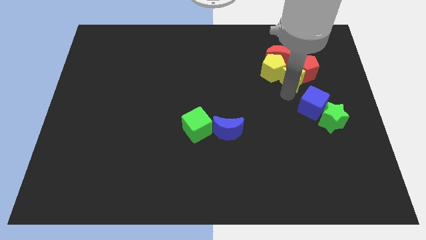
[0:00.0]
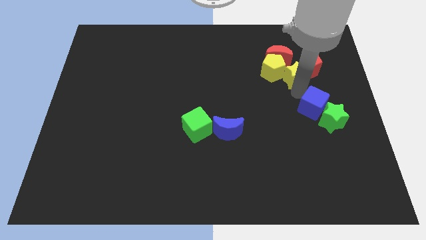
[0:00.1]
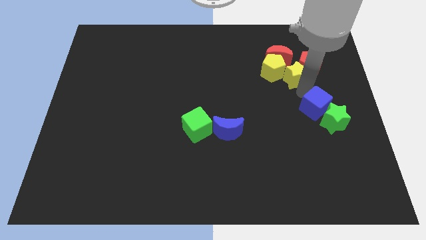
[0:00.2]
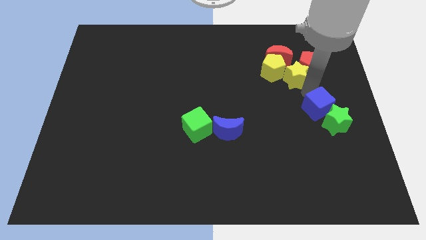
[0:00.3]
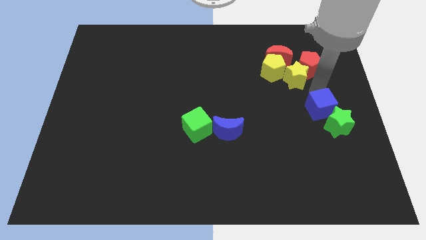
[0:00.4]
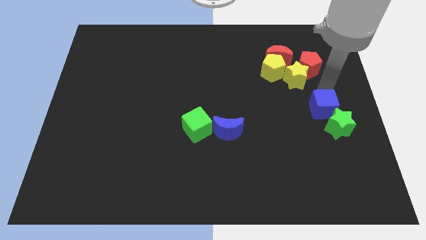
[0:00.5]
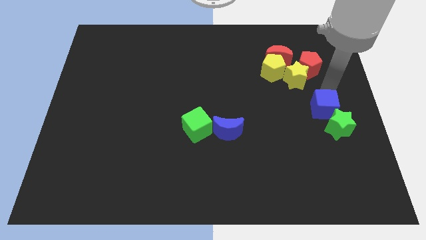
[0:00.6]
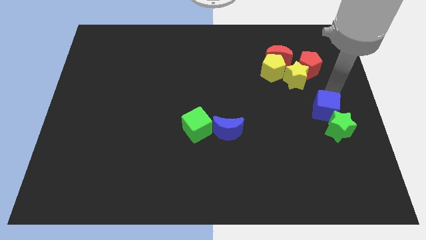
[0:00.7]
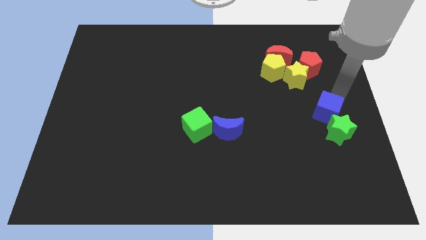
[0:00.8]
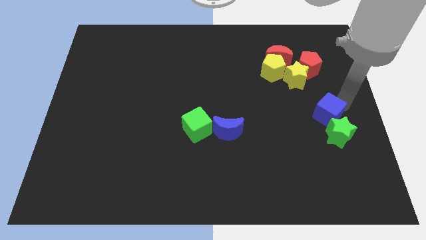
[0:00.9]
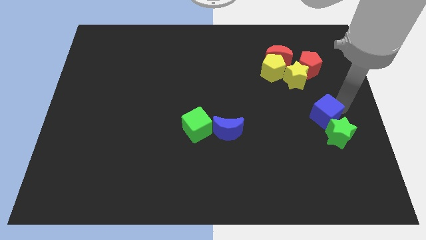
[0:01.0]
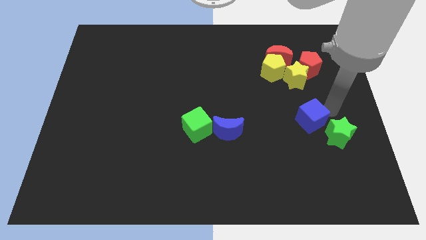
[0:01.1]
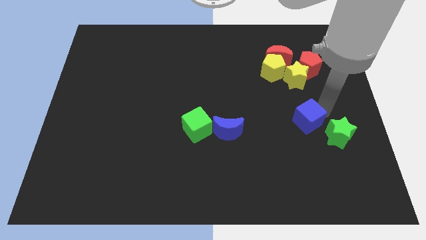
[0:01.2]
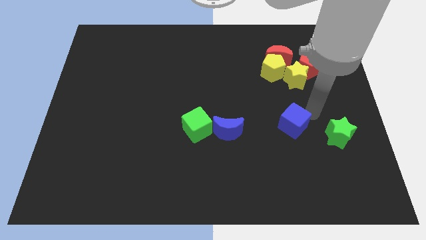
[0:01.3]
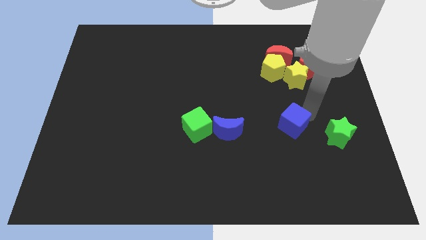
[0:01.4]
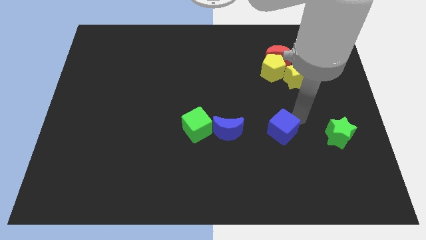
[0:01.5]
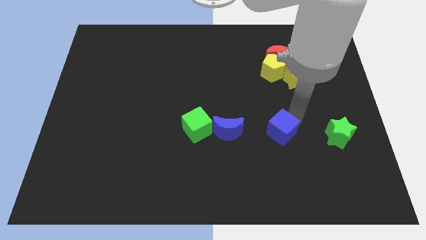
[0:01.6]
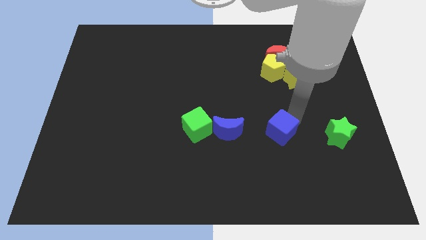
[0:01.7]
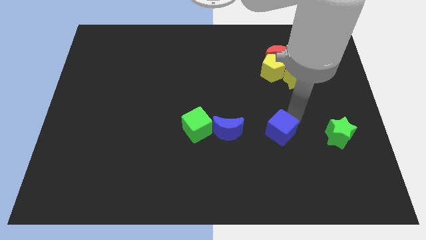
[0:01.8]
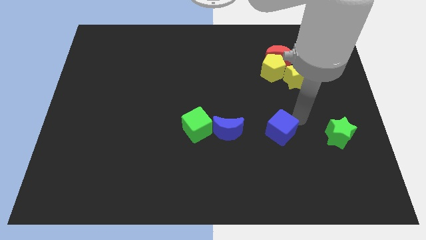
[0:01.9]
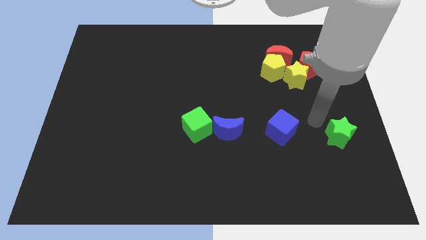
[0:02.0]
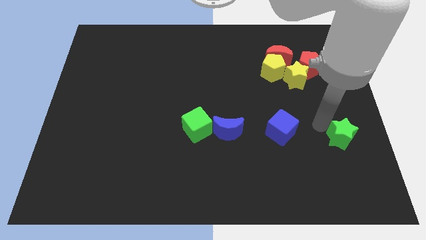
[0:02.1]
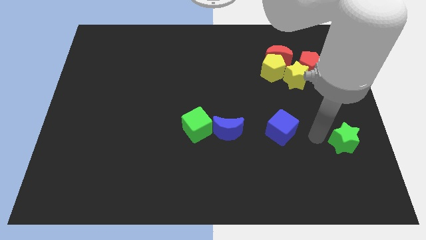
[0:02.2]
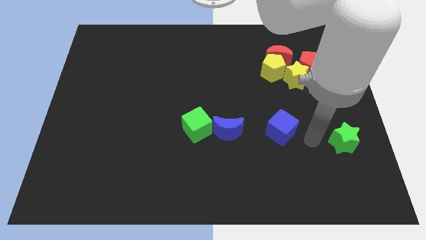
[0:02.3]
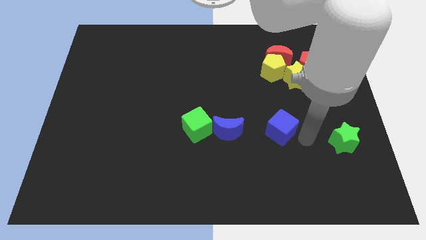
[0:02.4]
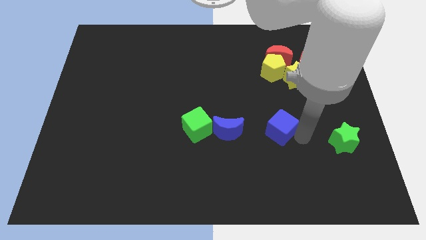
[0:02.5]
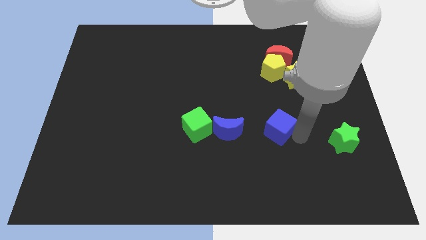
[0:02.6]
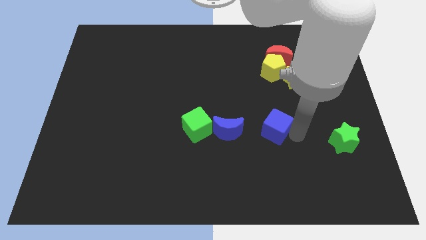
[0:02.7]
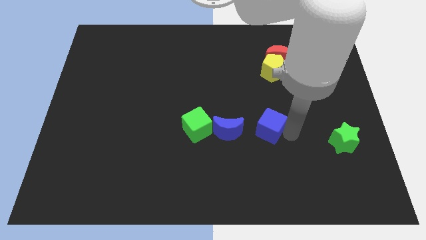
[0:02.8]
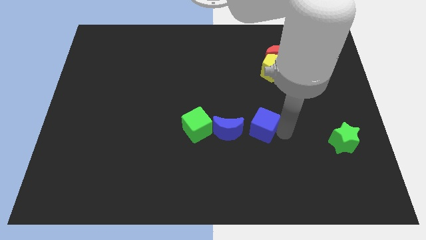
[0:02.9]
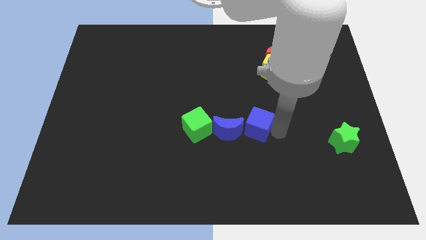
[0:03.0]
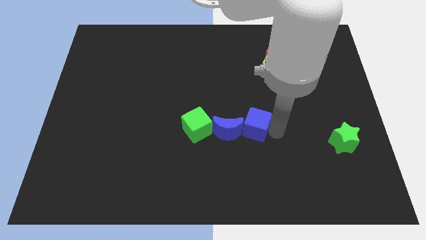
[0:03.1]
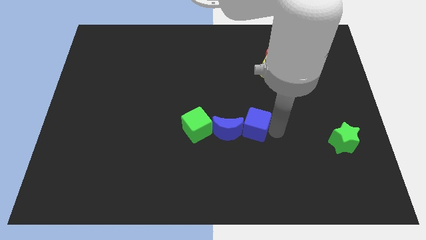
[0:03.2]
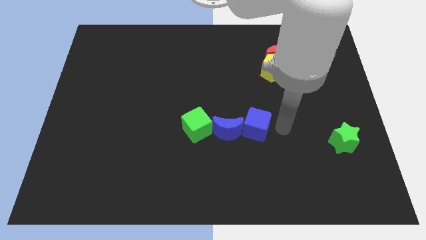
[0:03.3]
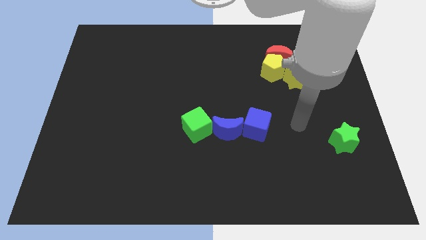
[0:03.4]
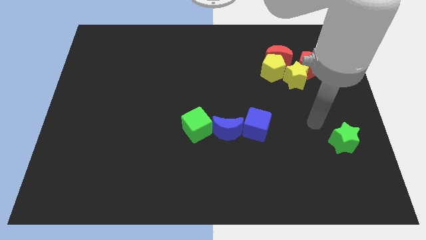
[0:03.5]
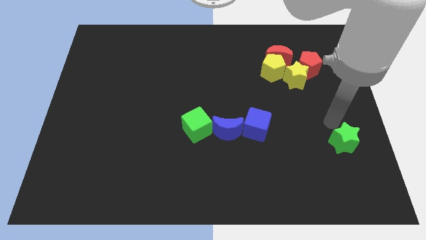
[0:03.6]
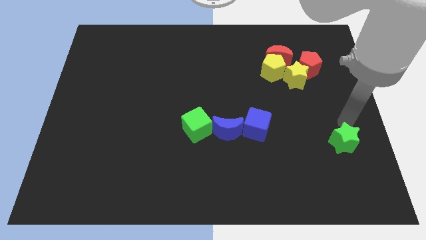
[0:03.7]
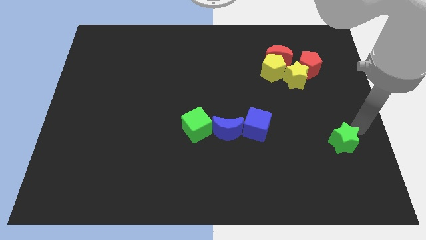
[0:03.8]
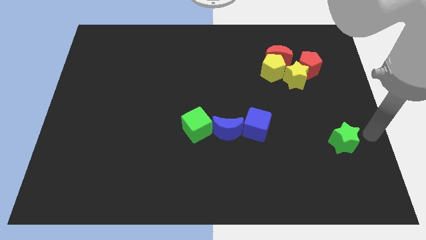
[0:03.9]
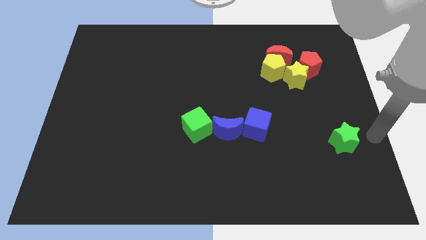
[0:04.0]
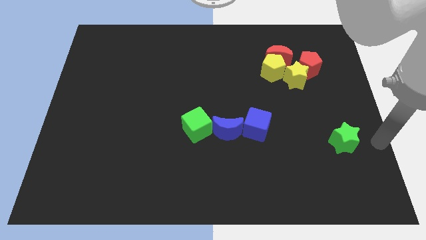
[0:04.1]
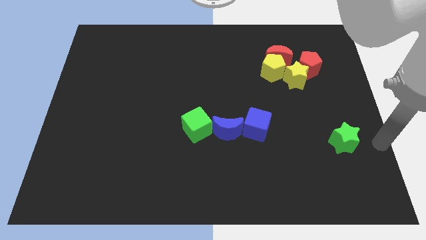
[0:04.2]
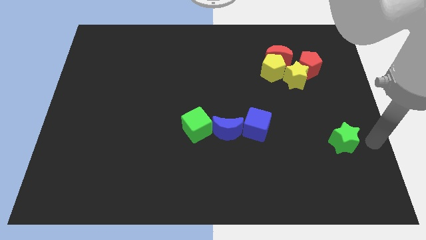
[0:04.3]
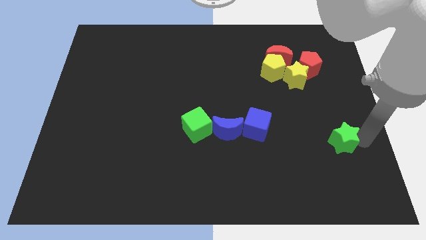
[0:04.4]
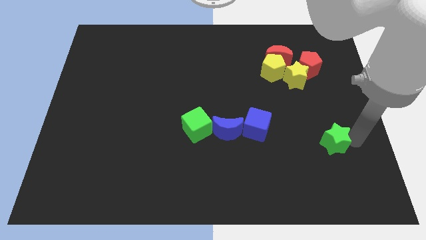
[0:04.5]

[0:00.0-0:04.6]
push the blue cube into the blue crescent

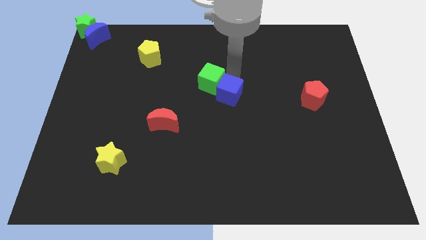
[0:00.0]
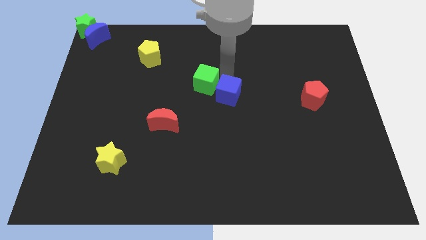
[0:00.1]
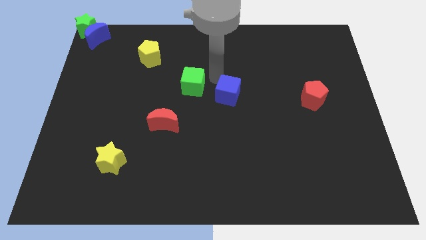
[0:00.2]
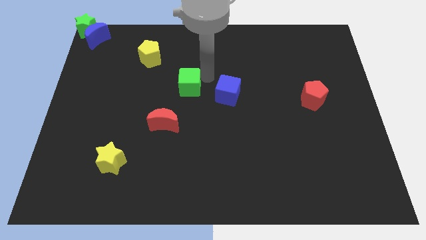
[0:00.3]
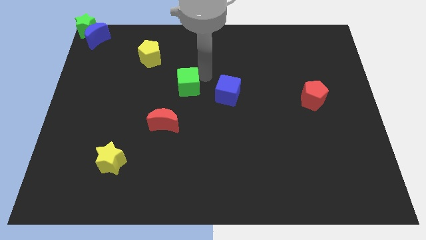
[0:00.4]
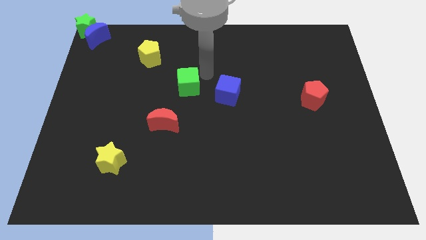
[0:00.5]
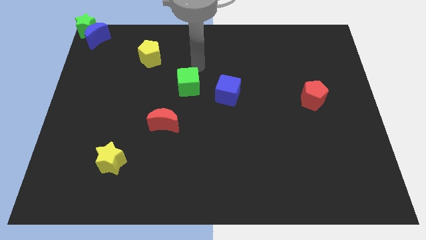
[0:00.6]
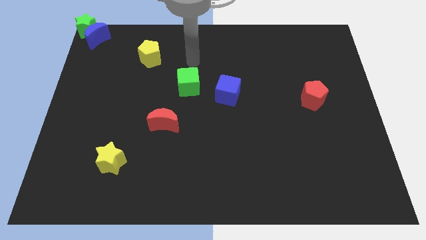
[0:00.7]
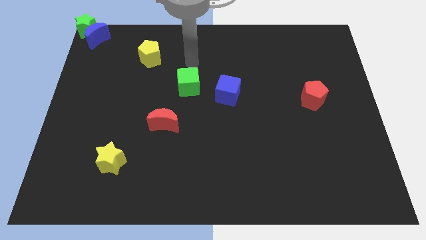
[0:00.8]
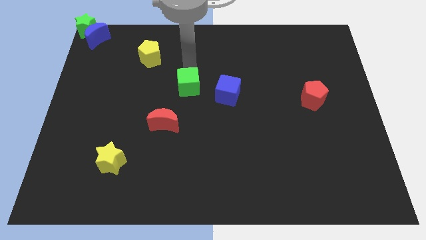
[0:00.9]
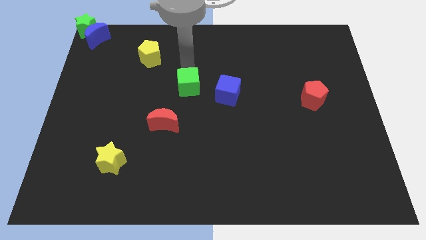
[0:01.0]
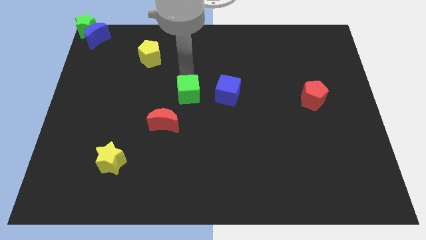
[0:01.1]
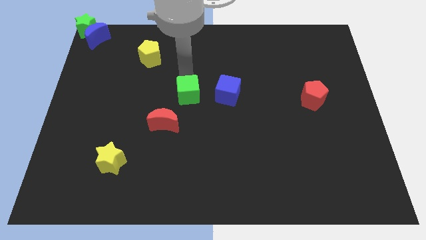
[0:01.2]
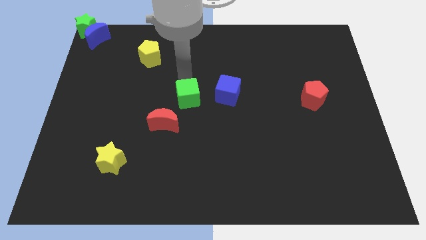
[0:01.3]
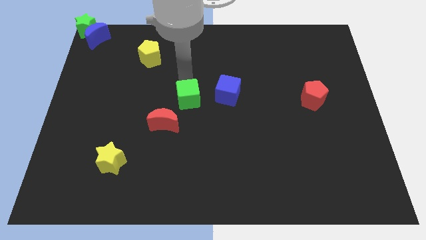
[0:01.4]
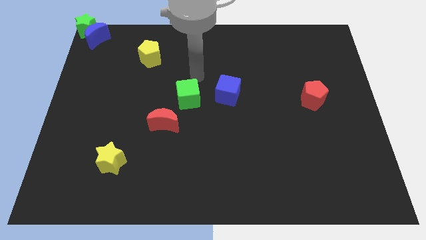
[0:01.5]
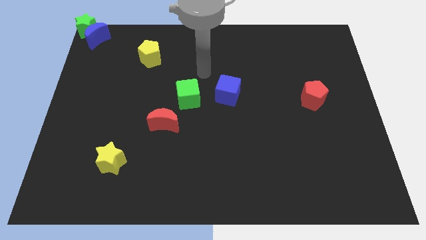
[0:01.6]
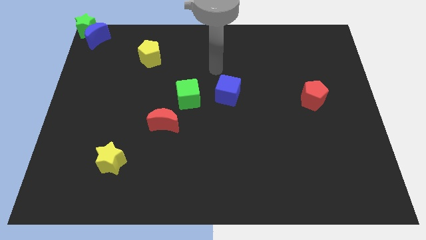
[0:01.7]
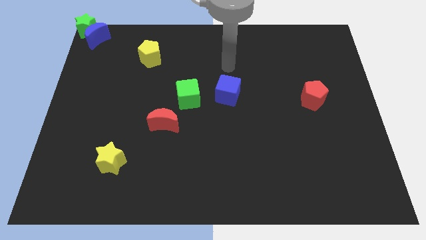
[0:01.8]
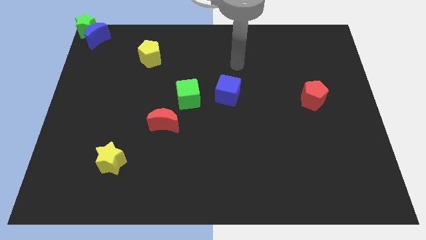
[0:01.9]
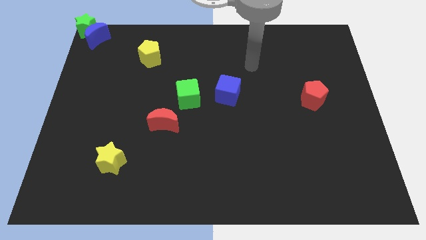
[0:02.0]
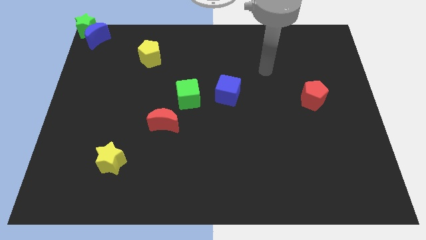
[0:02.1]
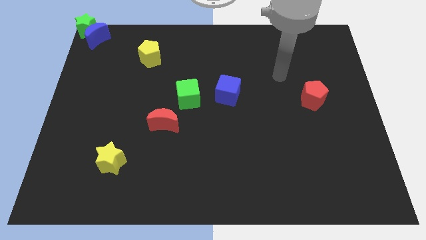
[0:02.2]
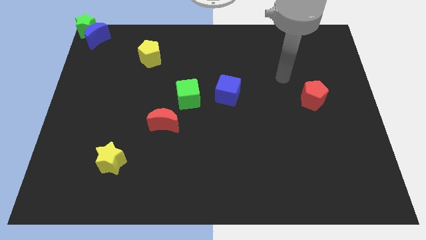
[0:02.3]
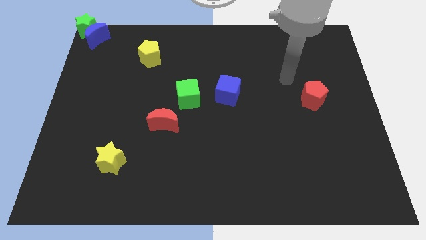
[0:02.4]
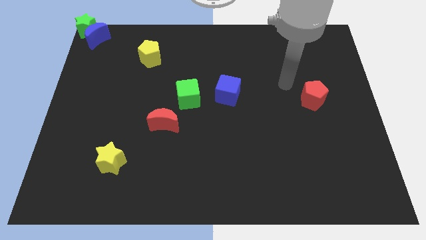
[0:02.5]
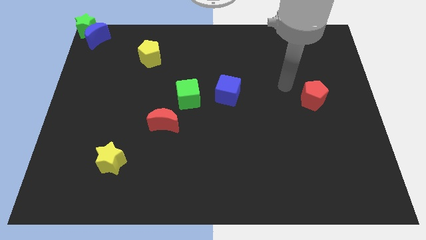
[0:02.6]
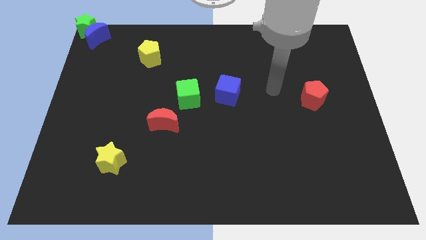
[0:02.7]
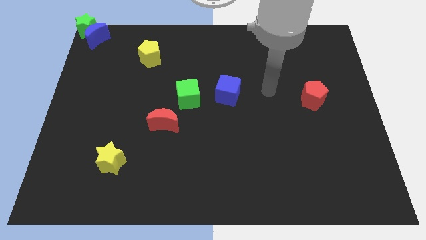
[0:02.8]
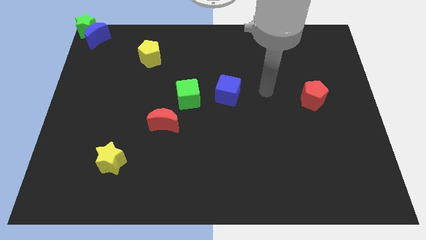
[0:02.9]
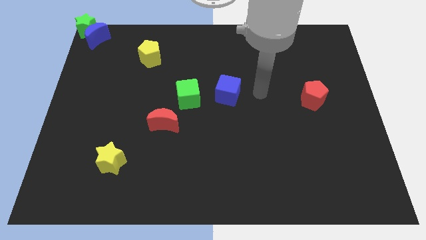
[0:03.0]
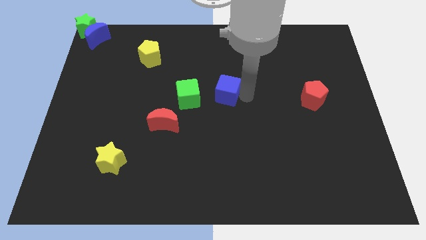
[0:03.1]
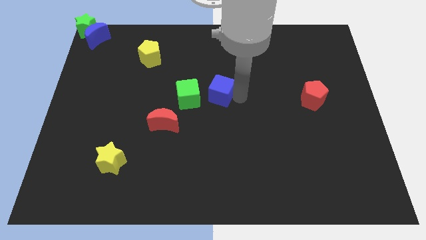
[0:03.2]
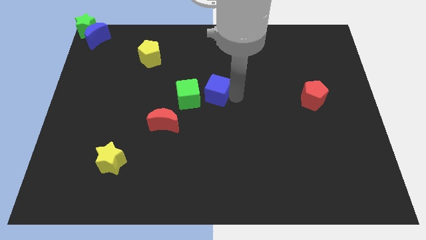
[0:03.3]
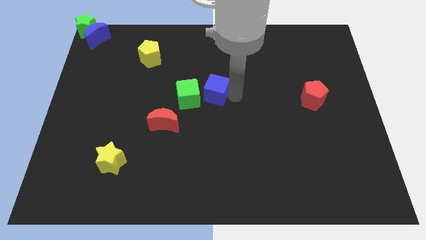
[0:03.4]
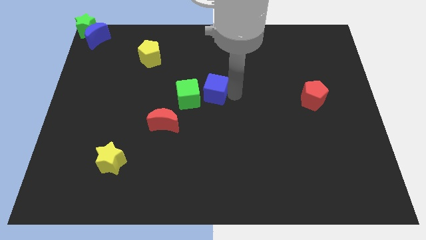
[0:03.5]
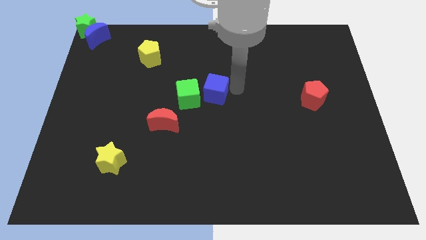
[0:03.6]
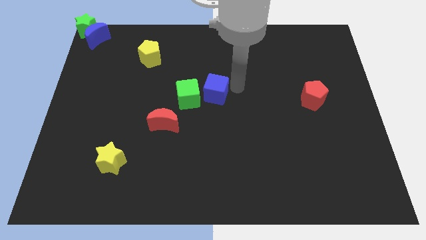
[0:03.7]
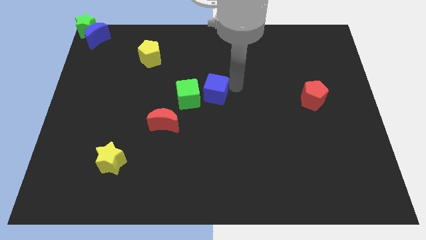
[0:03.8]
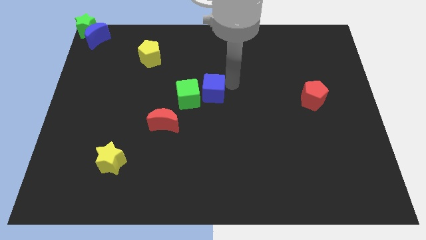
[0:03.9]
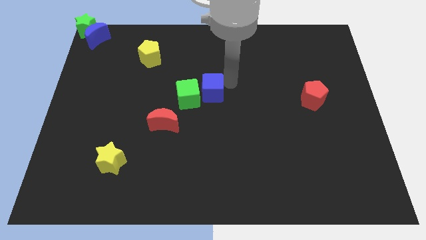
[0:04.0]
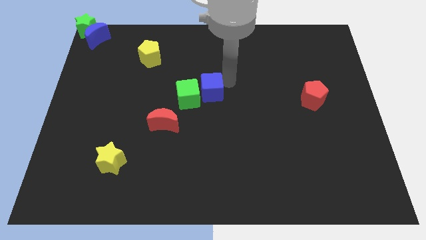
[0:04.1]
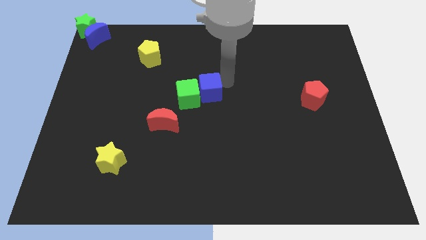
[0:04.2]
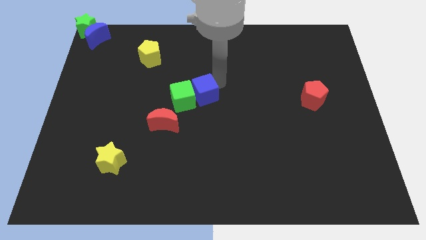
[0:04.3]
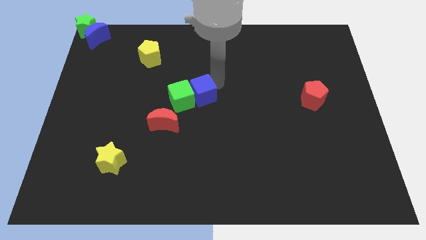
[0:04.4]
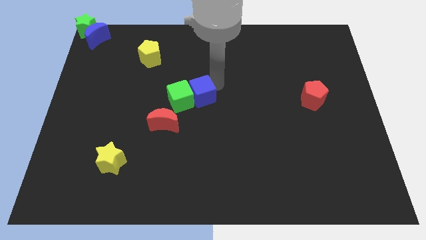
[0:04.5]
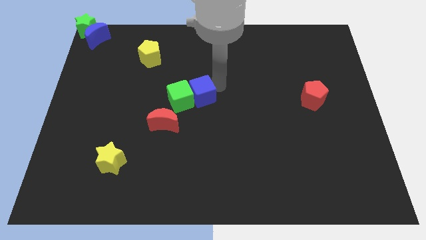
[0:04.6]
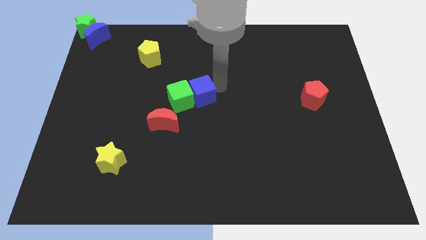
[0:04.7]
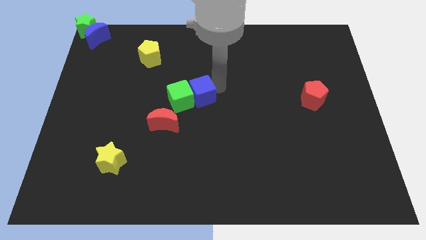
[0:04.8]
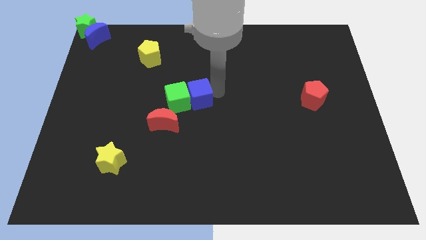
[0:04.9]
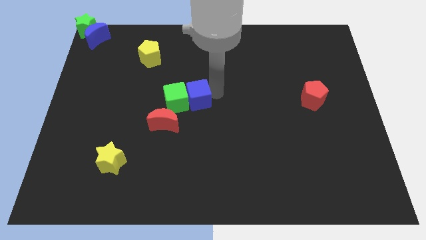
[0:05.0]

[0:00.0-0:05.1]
push the greeen cube and blue cube towards the top side of the red moon
